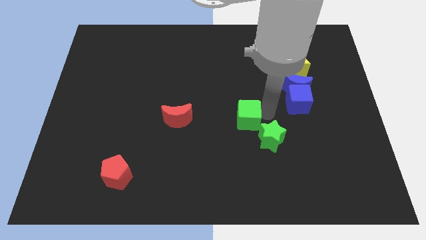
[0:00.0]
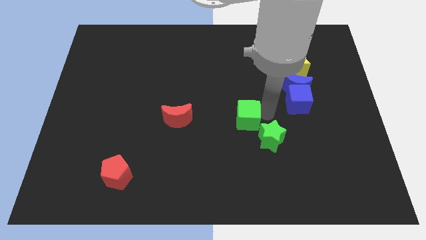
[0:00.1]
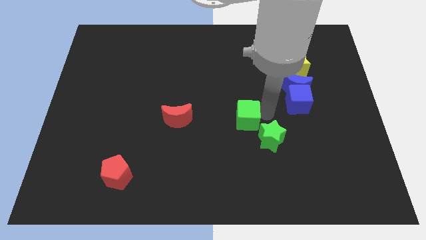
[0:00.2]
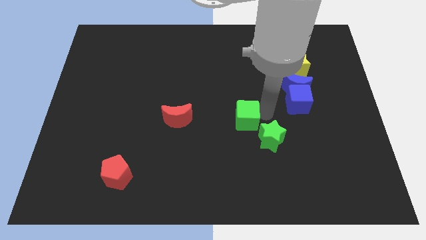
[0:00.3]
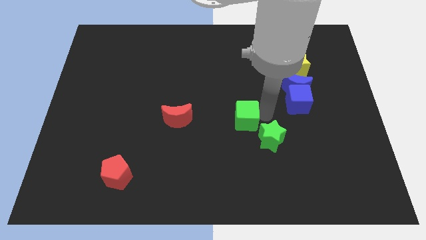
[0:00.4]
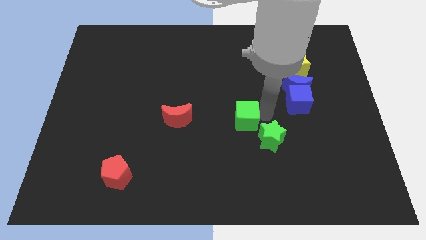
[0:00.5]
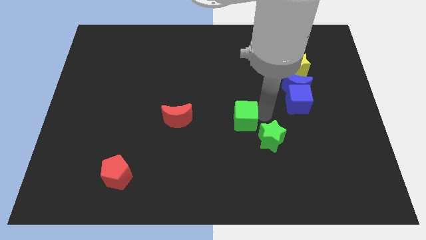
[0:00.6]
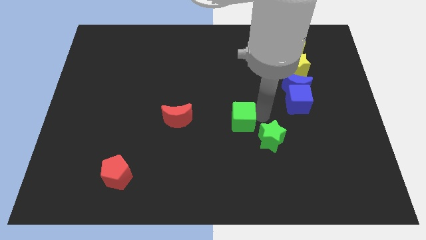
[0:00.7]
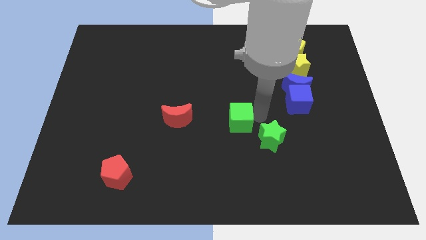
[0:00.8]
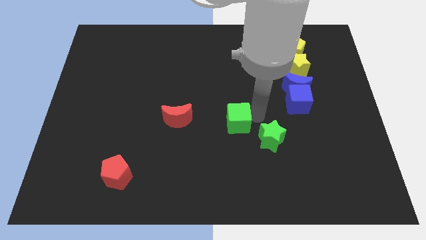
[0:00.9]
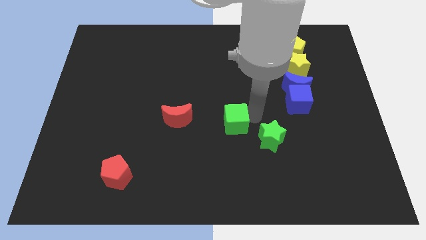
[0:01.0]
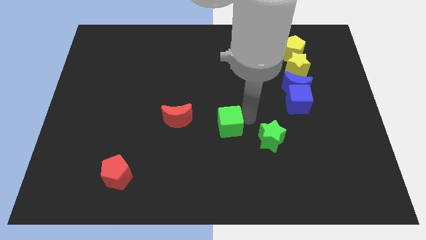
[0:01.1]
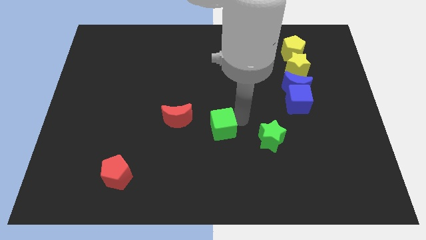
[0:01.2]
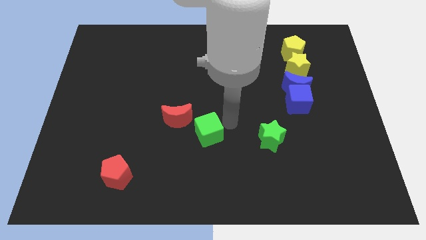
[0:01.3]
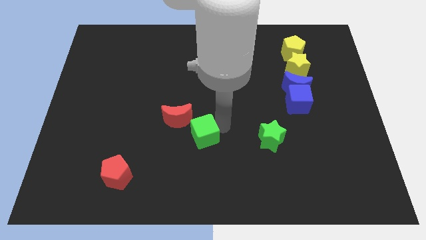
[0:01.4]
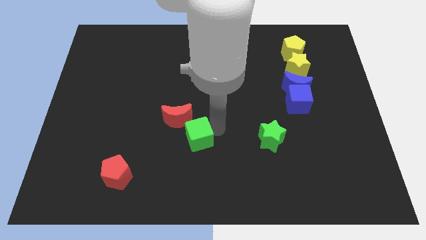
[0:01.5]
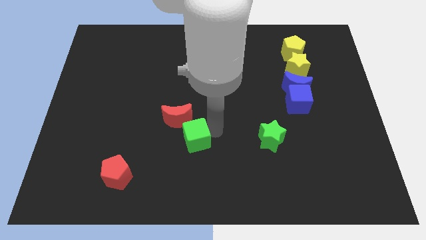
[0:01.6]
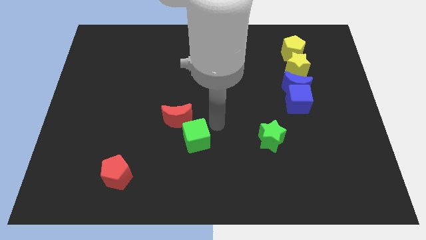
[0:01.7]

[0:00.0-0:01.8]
place the green cube below the red moon

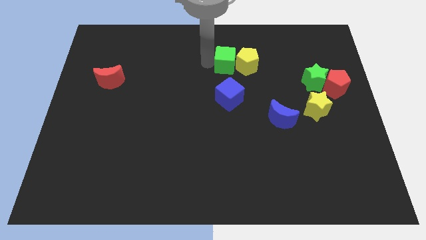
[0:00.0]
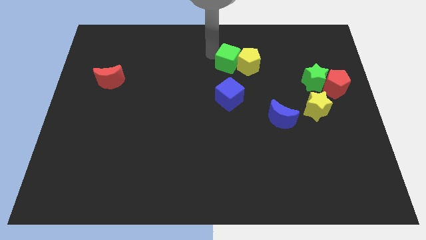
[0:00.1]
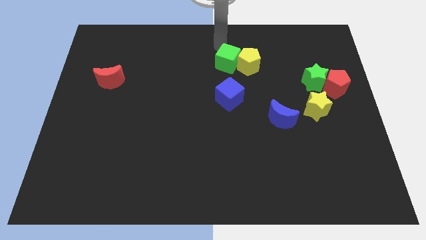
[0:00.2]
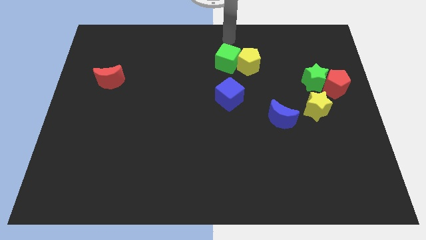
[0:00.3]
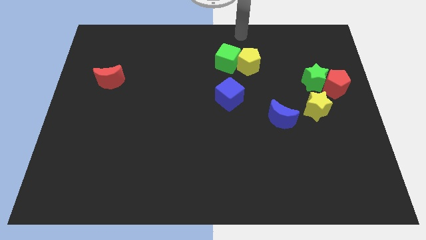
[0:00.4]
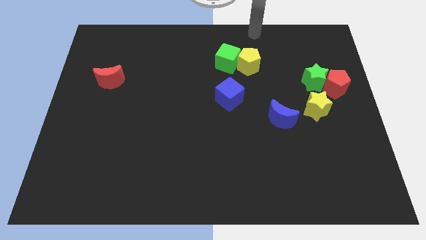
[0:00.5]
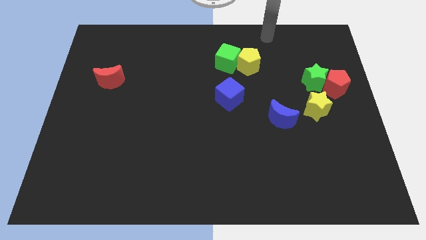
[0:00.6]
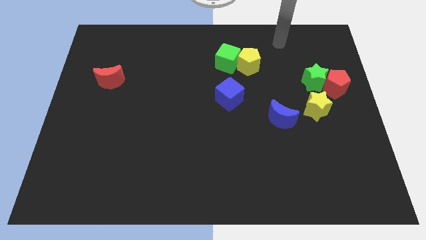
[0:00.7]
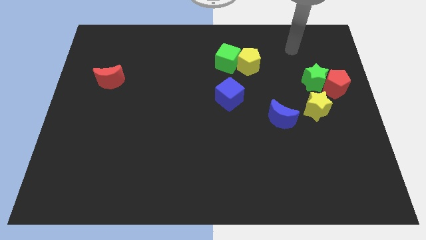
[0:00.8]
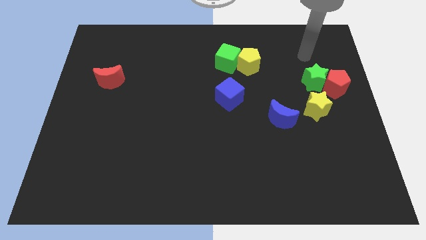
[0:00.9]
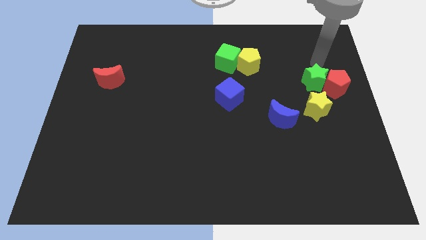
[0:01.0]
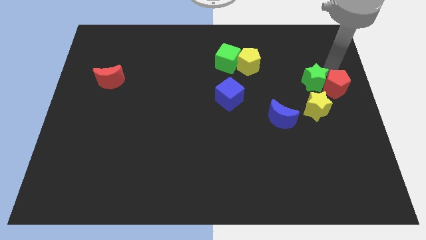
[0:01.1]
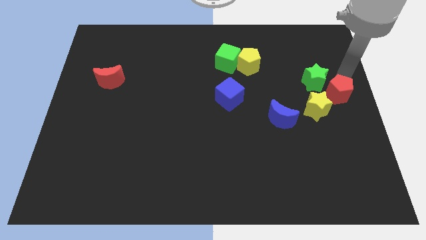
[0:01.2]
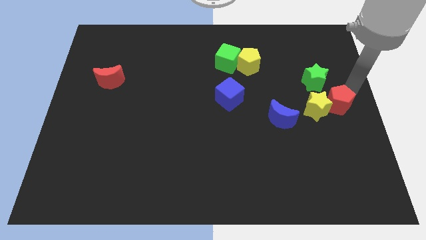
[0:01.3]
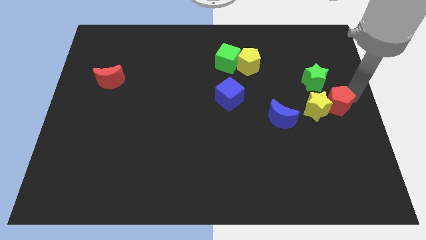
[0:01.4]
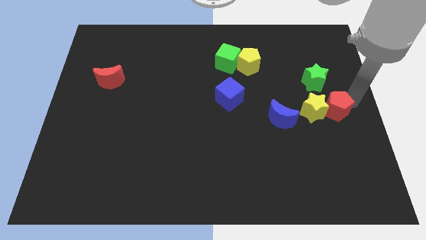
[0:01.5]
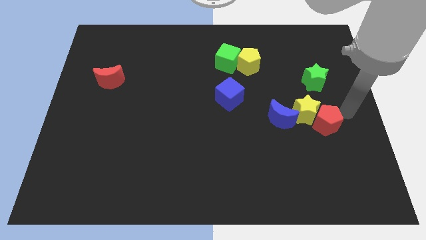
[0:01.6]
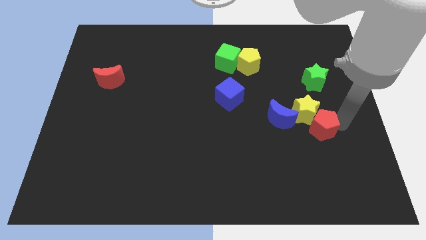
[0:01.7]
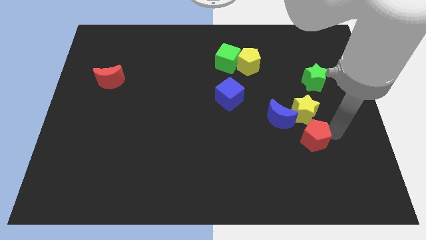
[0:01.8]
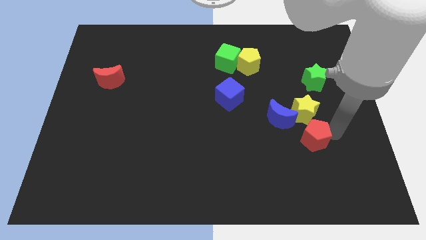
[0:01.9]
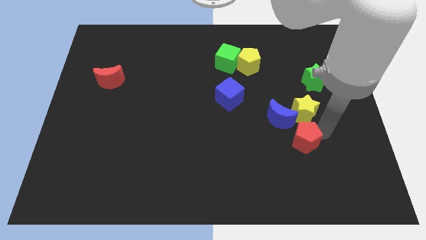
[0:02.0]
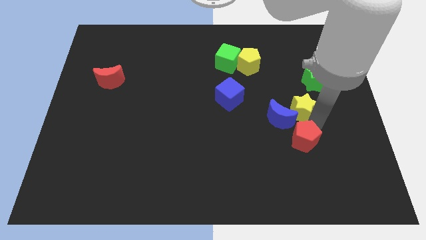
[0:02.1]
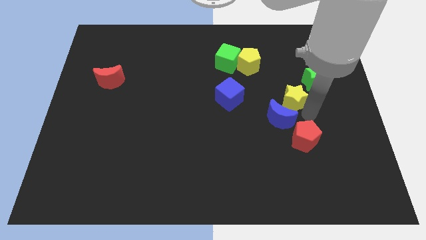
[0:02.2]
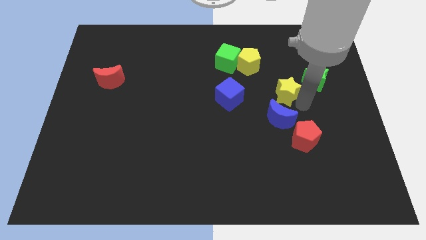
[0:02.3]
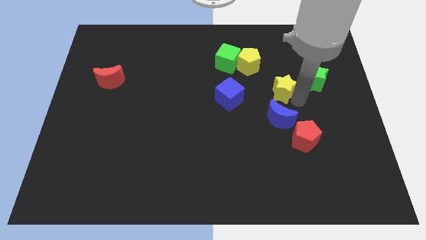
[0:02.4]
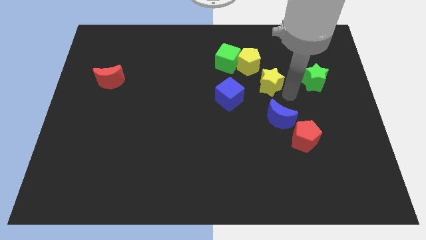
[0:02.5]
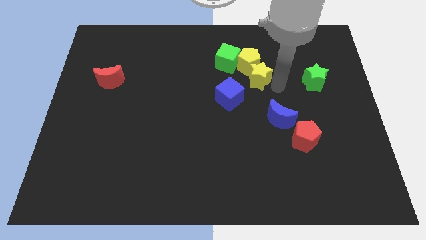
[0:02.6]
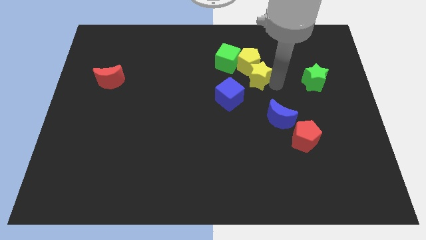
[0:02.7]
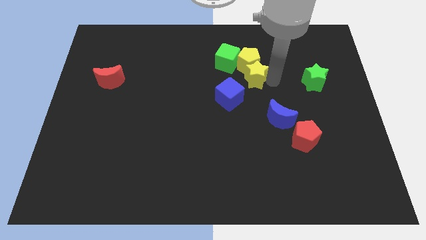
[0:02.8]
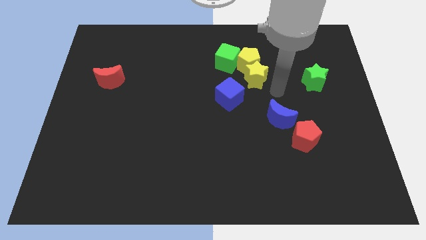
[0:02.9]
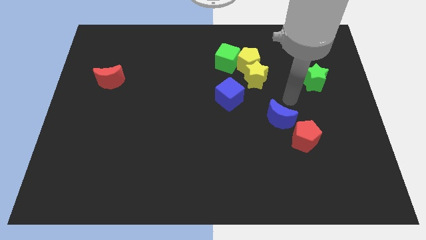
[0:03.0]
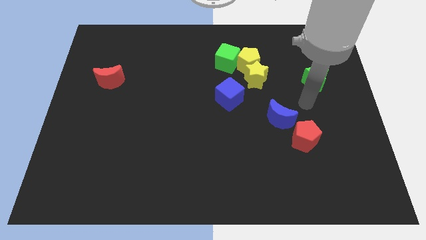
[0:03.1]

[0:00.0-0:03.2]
push the yellow star into the yellow pentagon

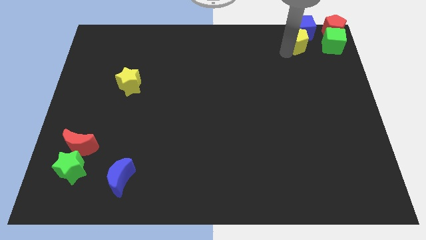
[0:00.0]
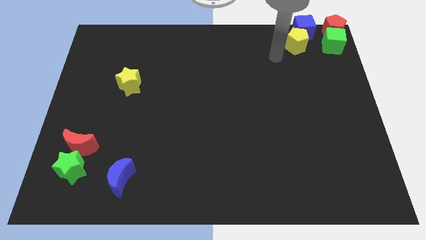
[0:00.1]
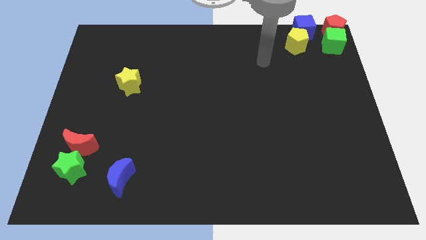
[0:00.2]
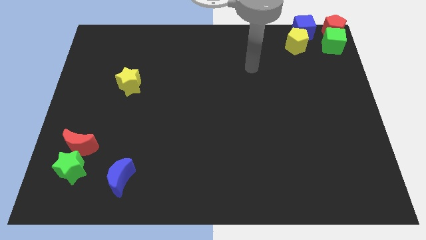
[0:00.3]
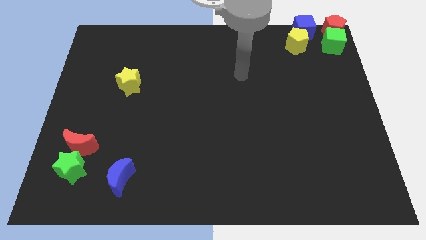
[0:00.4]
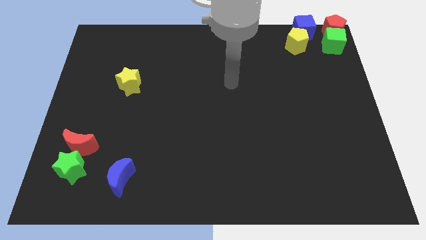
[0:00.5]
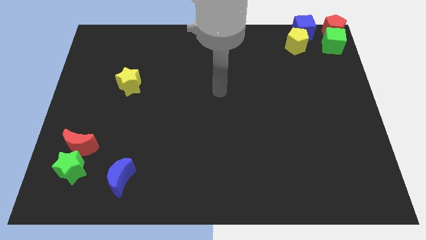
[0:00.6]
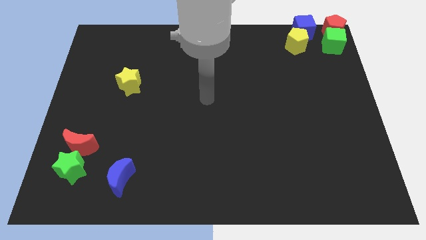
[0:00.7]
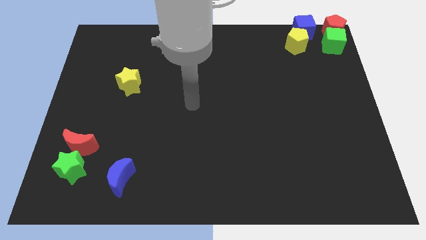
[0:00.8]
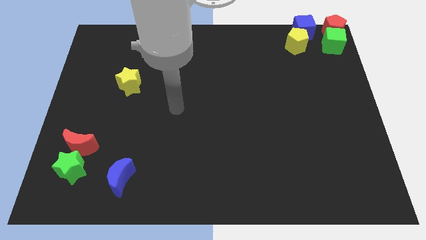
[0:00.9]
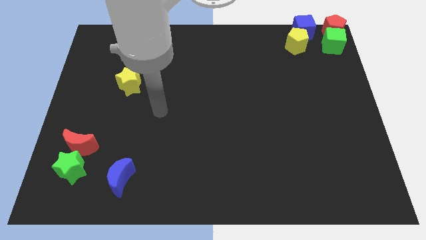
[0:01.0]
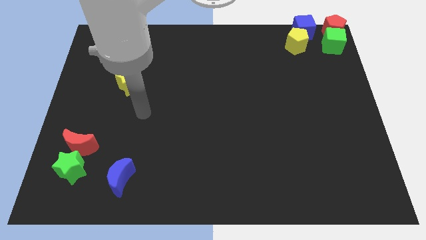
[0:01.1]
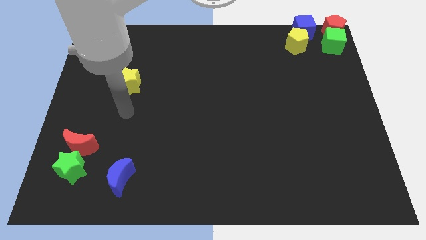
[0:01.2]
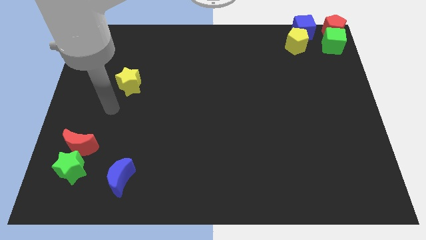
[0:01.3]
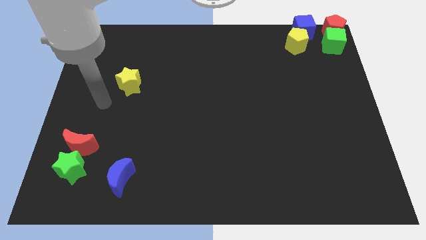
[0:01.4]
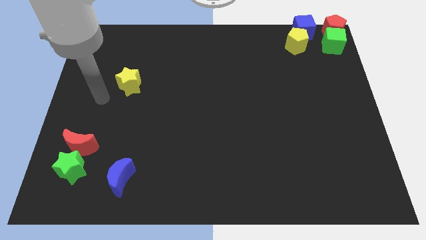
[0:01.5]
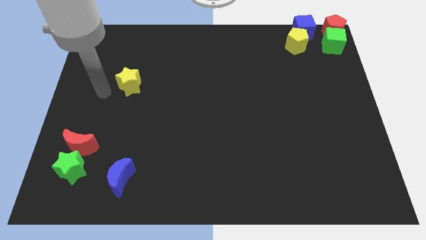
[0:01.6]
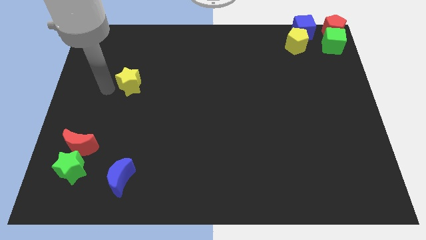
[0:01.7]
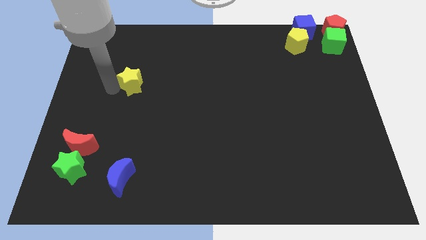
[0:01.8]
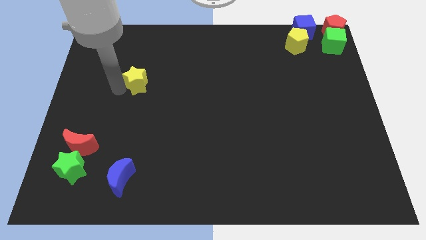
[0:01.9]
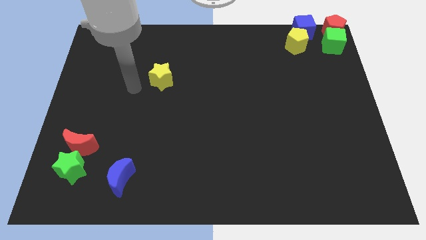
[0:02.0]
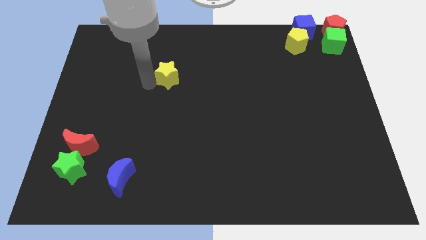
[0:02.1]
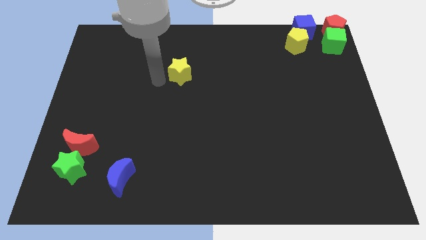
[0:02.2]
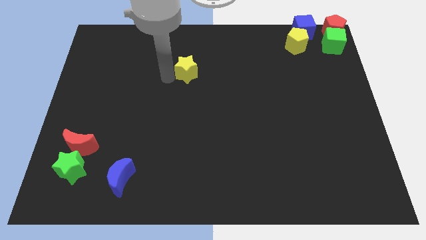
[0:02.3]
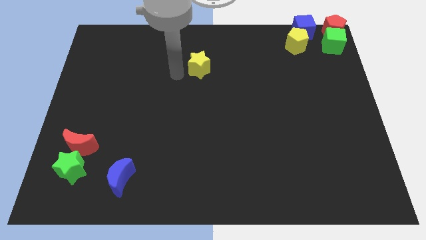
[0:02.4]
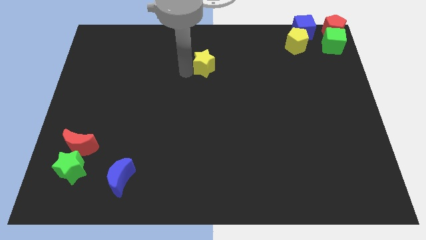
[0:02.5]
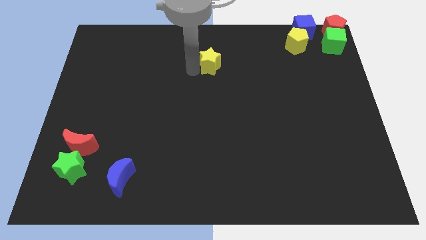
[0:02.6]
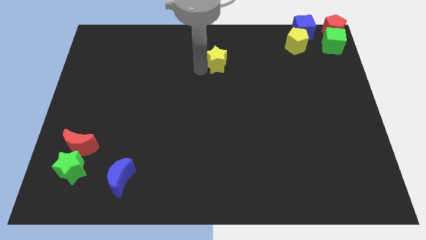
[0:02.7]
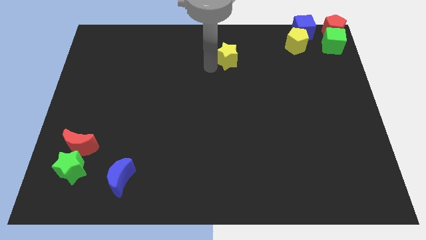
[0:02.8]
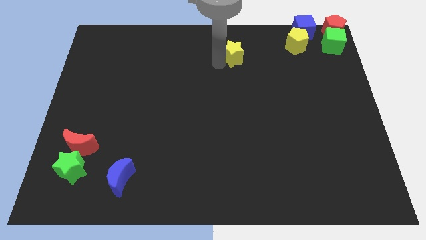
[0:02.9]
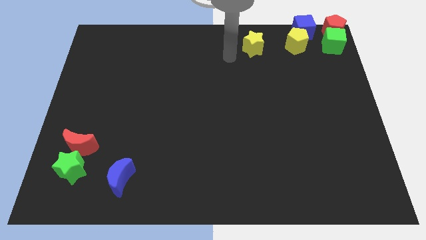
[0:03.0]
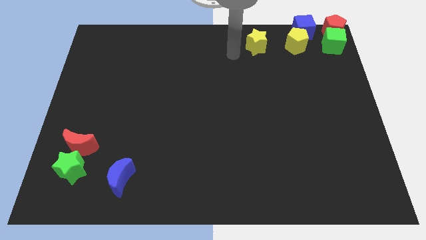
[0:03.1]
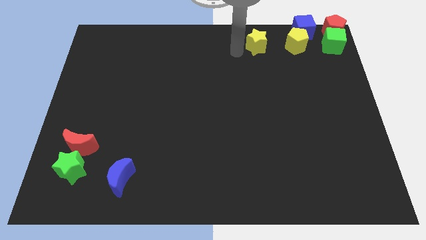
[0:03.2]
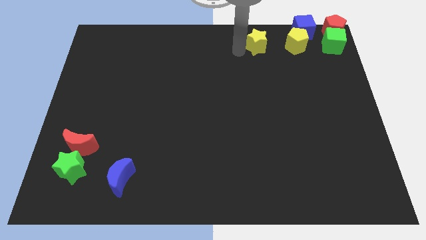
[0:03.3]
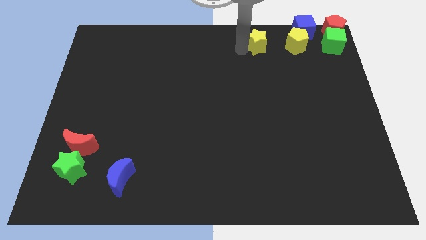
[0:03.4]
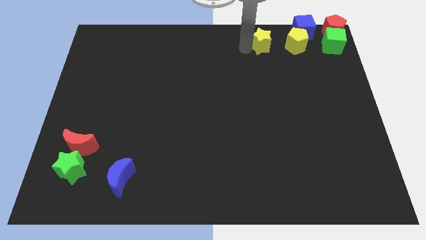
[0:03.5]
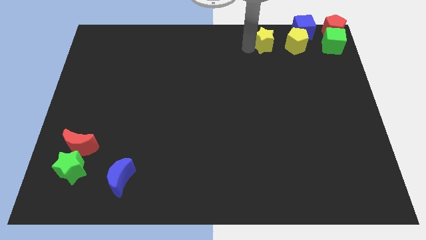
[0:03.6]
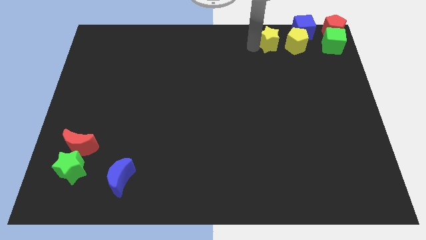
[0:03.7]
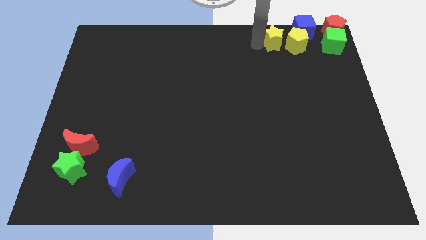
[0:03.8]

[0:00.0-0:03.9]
move the yellow star to the left of yellow pentagon to the top right of the board
